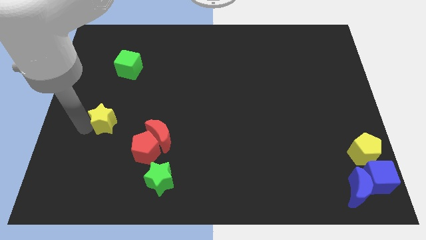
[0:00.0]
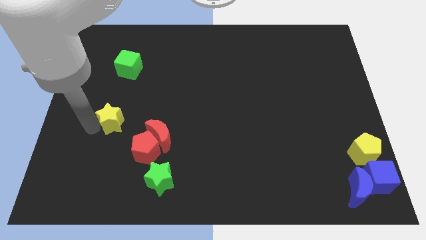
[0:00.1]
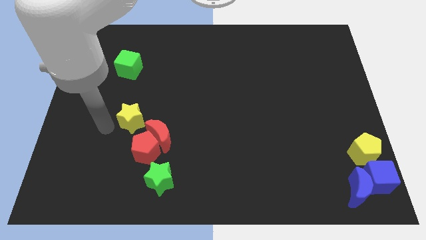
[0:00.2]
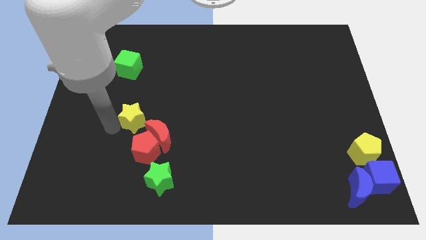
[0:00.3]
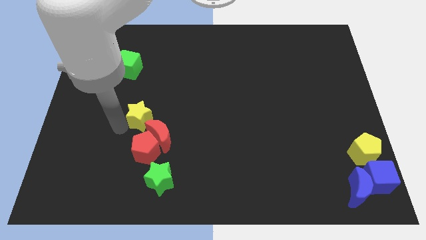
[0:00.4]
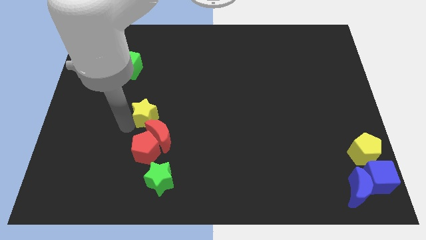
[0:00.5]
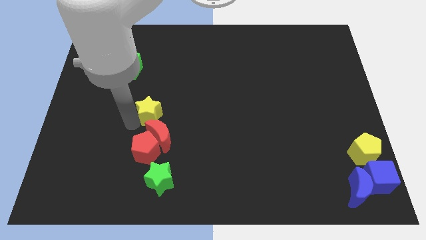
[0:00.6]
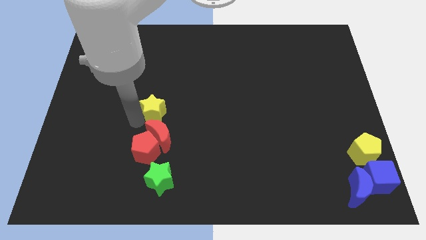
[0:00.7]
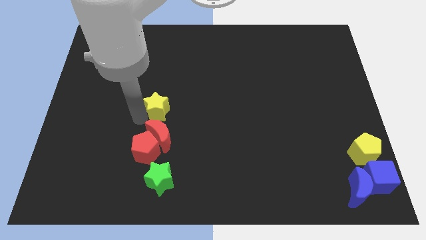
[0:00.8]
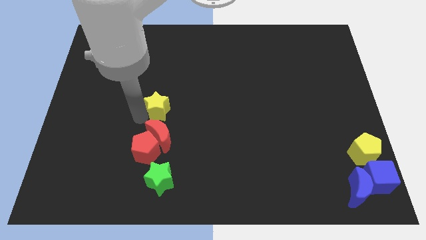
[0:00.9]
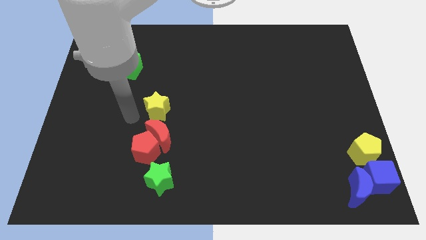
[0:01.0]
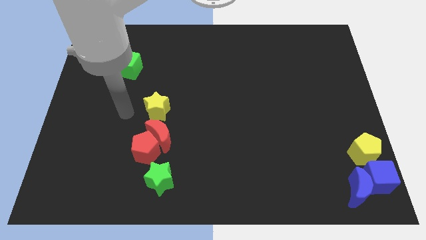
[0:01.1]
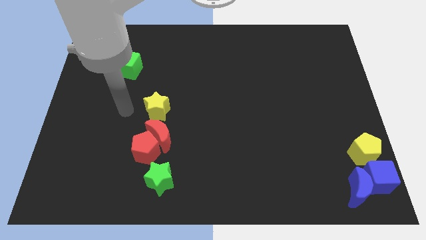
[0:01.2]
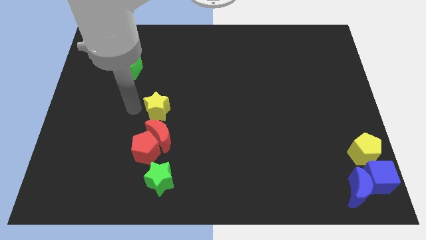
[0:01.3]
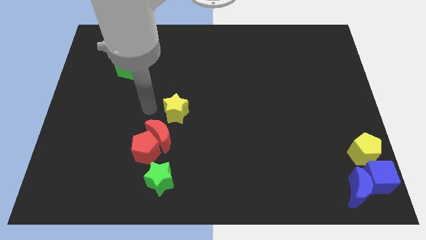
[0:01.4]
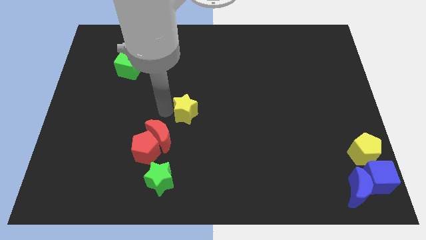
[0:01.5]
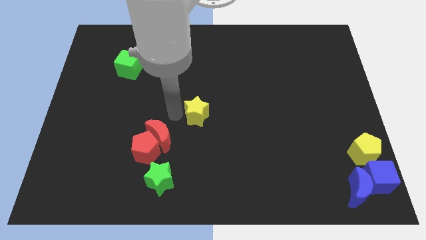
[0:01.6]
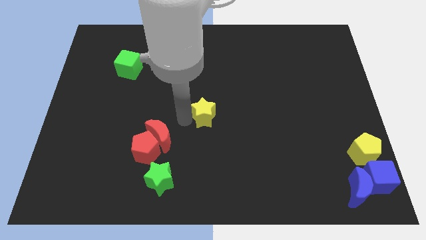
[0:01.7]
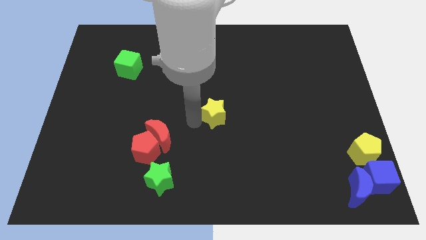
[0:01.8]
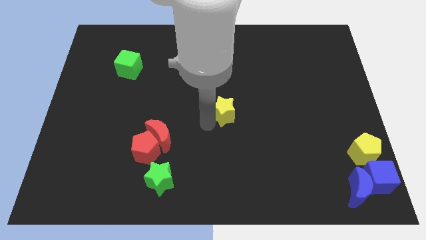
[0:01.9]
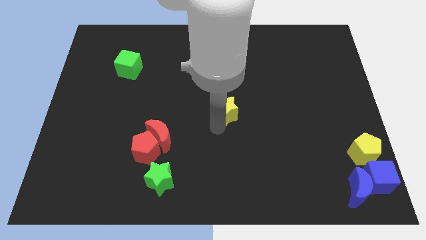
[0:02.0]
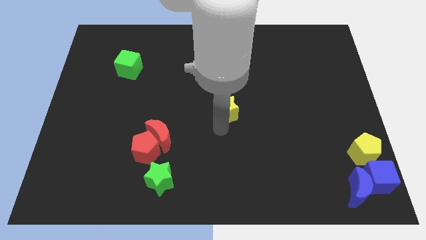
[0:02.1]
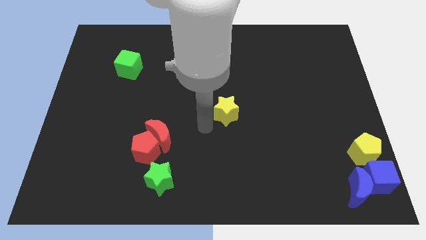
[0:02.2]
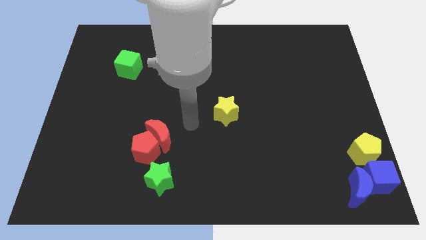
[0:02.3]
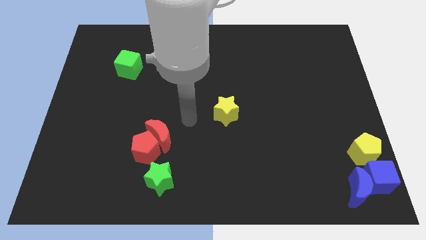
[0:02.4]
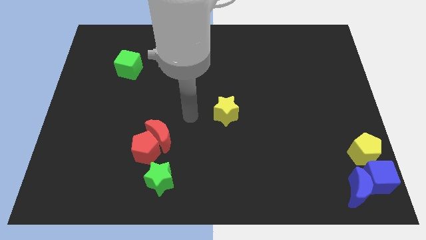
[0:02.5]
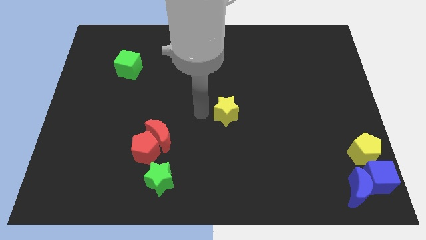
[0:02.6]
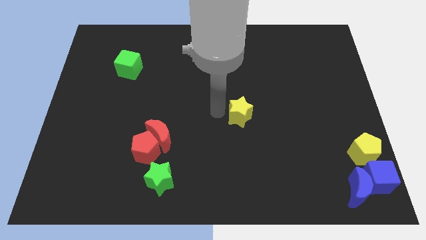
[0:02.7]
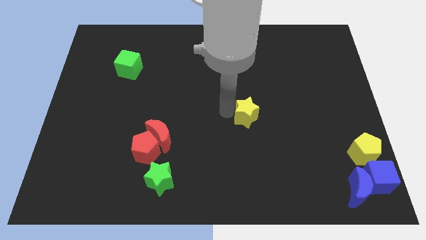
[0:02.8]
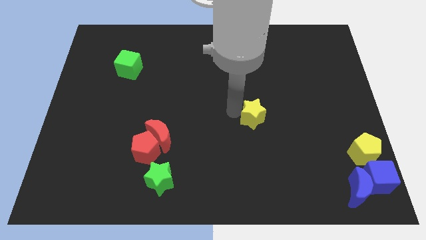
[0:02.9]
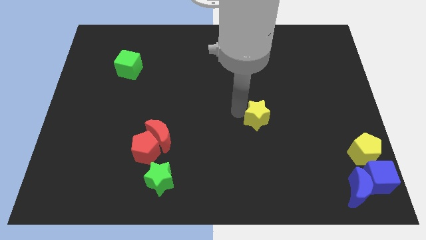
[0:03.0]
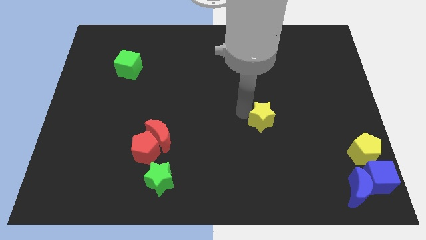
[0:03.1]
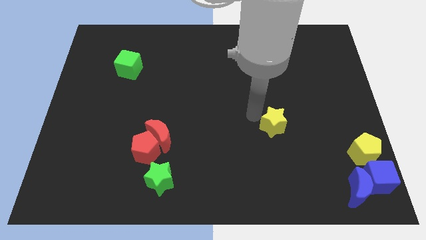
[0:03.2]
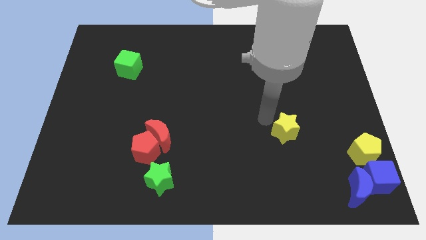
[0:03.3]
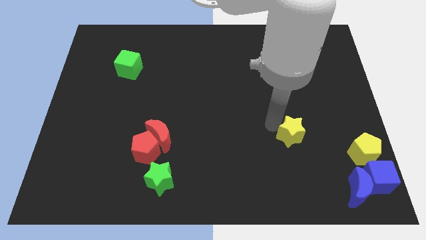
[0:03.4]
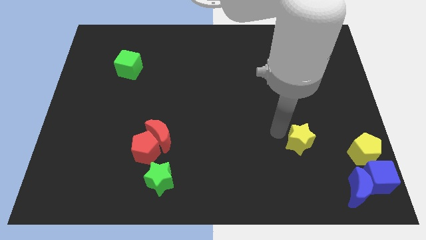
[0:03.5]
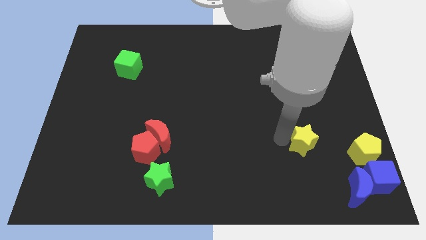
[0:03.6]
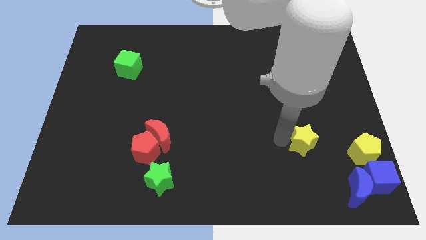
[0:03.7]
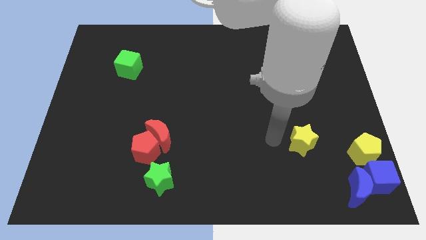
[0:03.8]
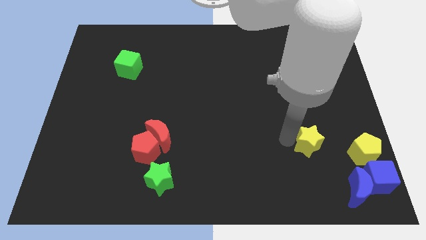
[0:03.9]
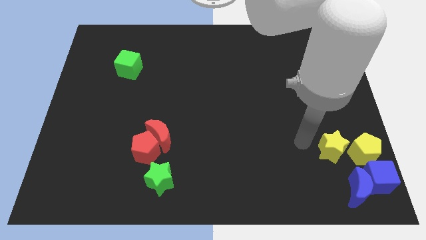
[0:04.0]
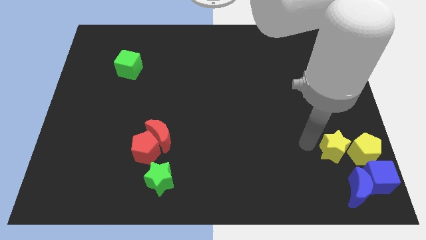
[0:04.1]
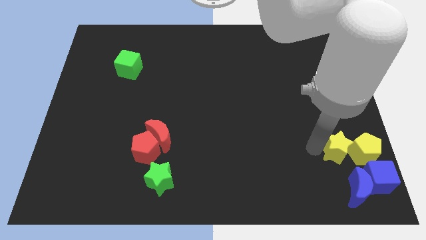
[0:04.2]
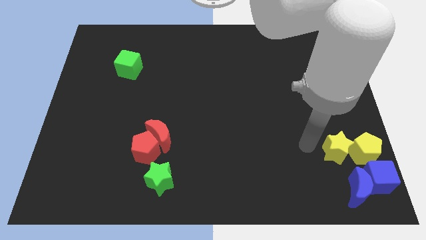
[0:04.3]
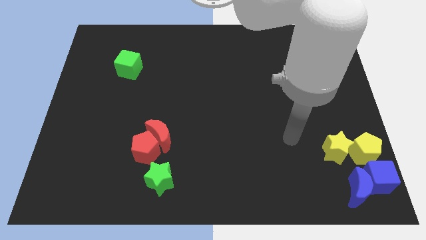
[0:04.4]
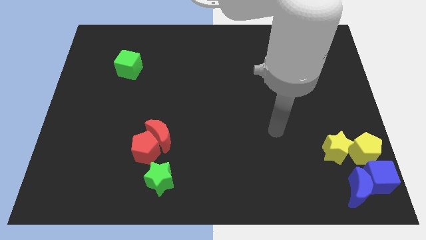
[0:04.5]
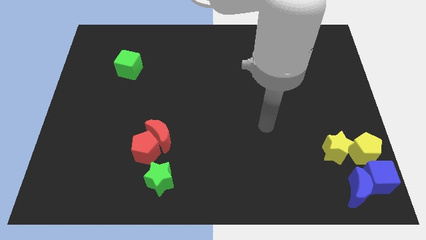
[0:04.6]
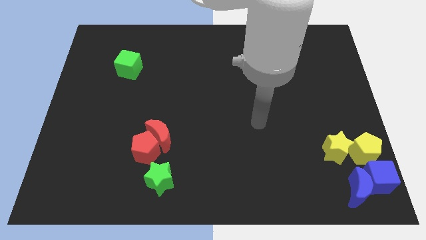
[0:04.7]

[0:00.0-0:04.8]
place yellow star to the left of yellow pentagon

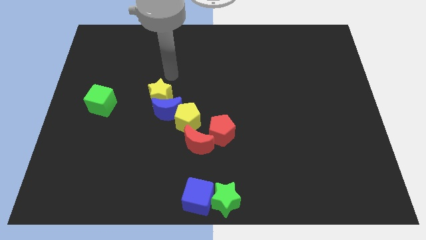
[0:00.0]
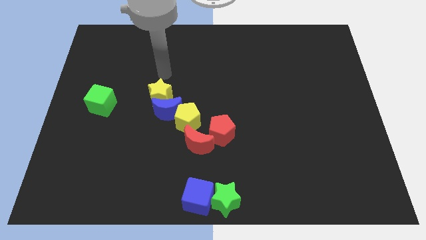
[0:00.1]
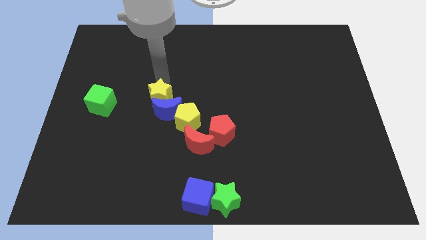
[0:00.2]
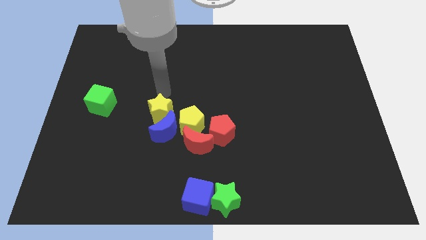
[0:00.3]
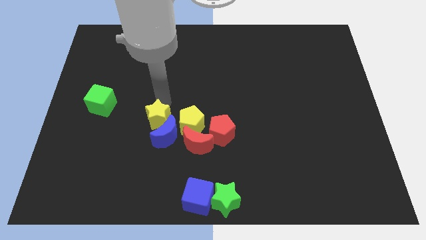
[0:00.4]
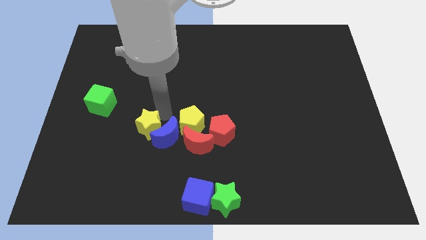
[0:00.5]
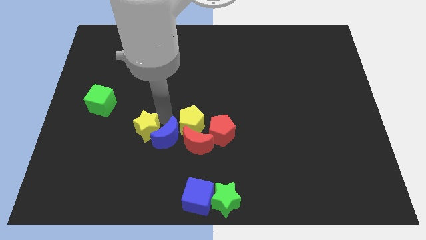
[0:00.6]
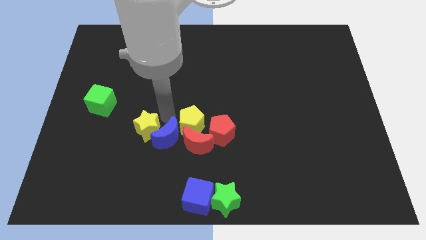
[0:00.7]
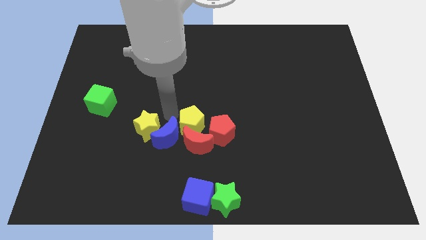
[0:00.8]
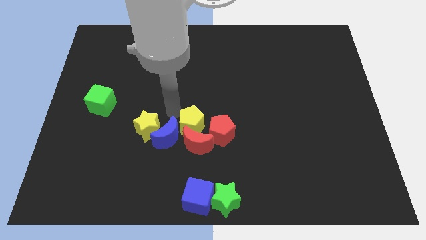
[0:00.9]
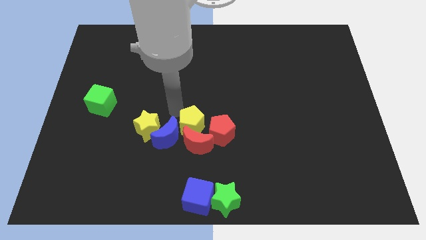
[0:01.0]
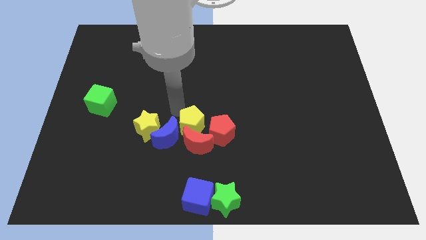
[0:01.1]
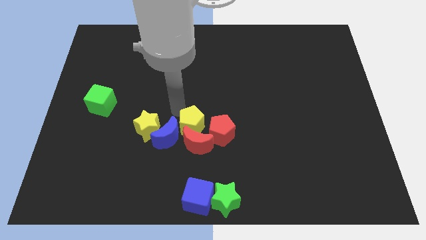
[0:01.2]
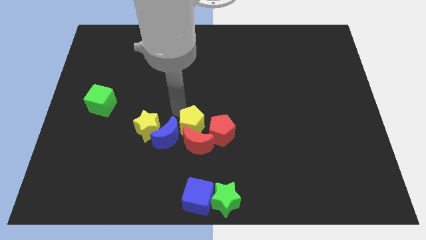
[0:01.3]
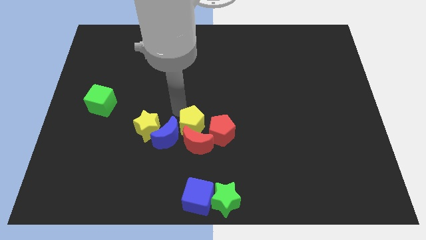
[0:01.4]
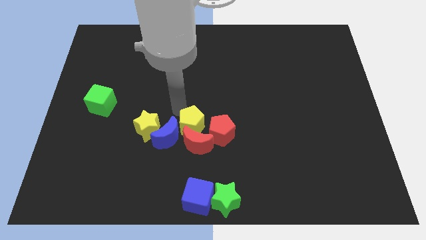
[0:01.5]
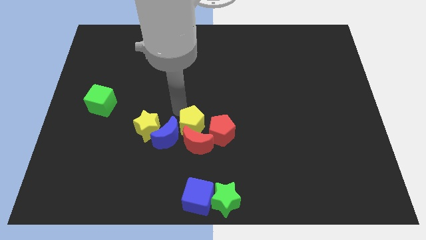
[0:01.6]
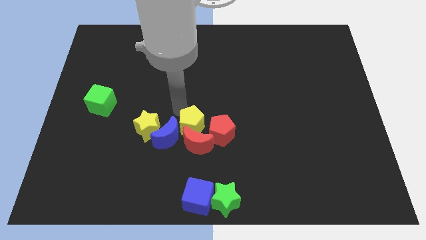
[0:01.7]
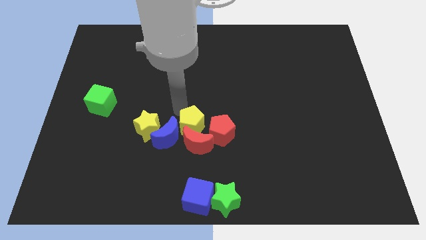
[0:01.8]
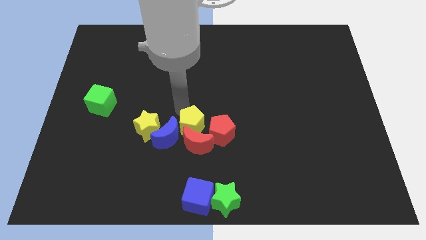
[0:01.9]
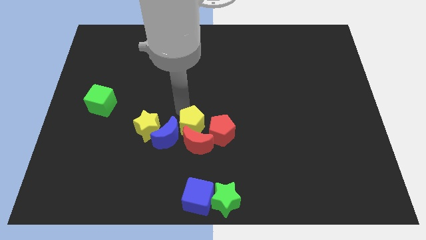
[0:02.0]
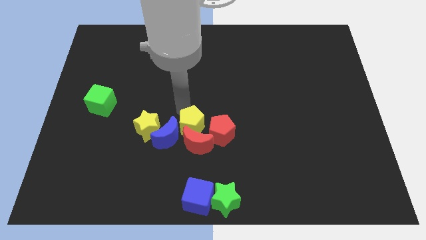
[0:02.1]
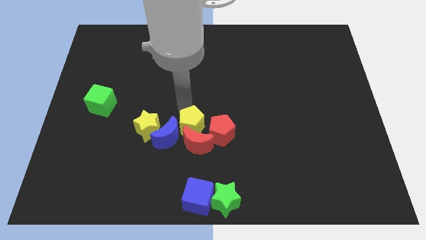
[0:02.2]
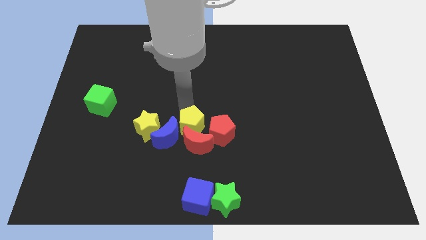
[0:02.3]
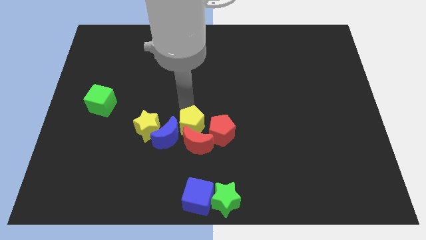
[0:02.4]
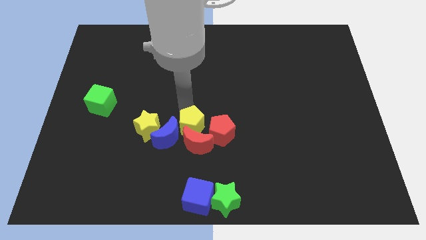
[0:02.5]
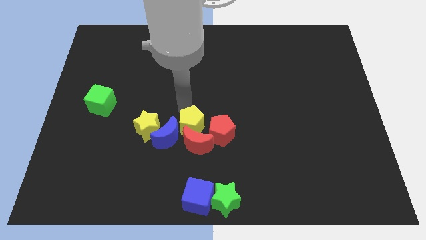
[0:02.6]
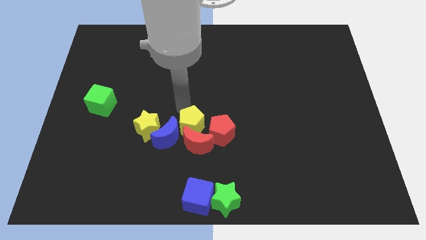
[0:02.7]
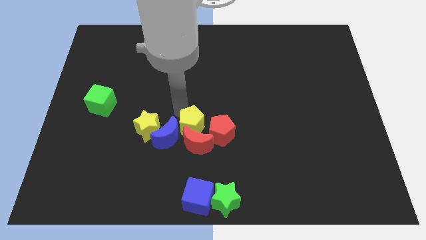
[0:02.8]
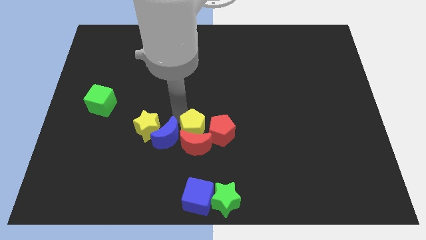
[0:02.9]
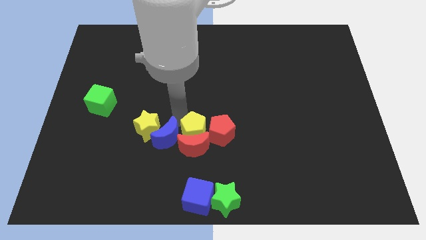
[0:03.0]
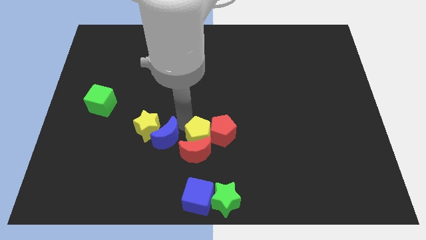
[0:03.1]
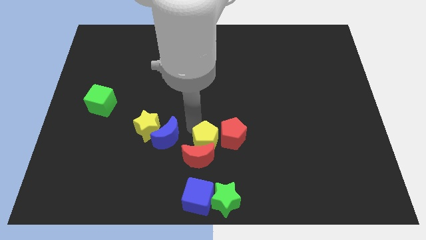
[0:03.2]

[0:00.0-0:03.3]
move the yellow star towards the left side of the blue crescent

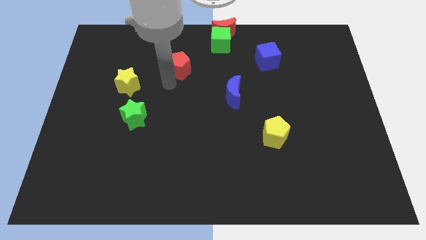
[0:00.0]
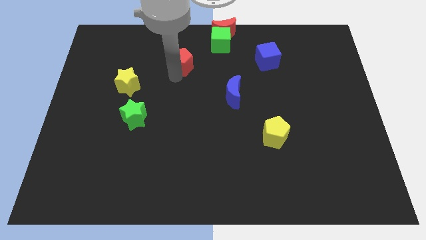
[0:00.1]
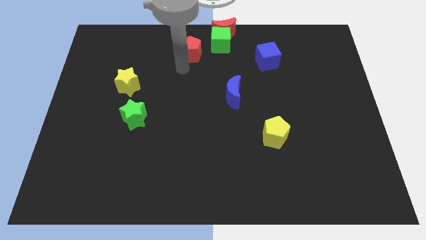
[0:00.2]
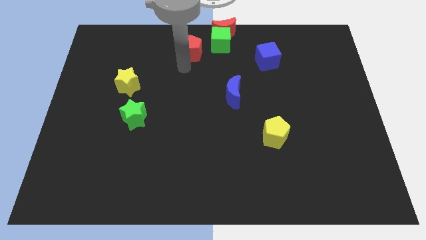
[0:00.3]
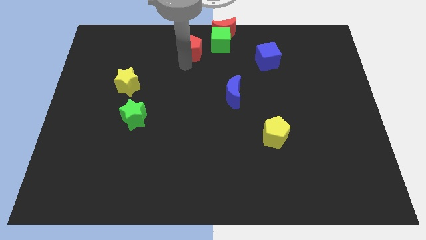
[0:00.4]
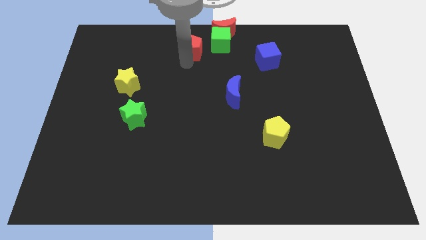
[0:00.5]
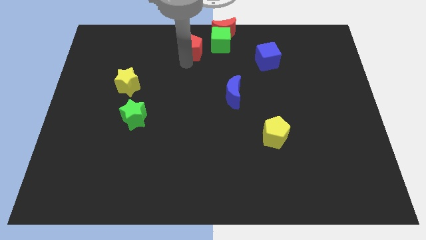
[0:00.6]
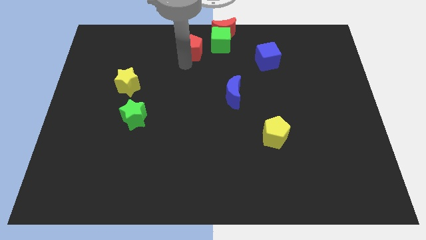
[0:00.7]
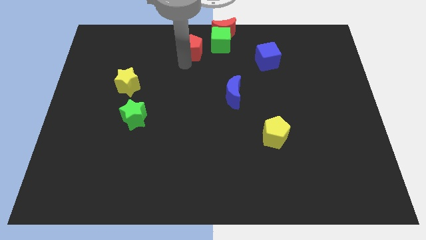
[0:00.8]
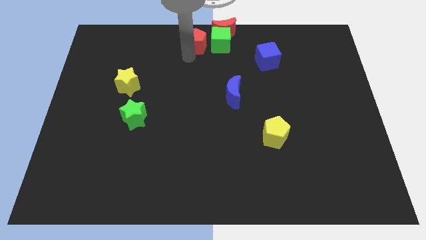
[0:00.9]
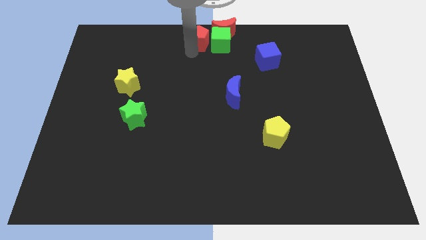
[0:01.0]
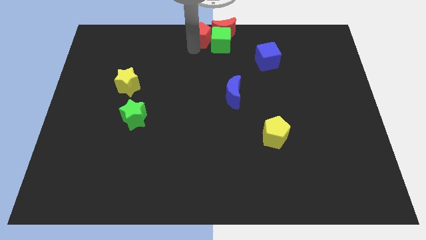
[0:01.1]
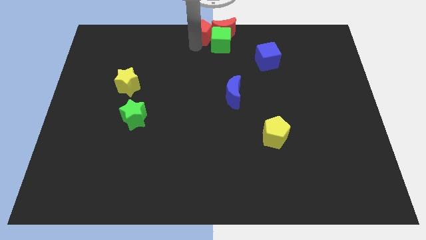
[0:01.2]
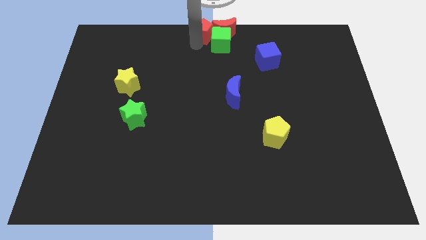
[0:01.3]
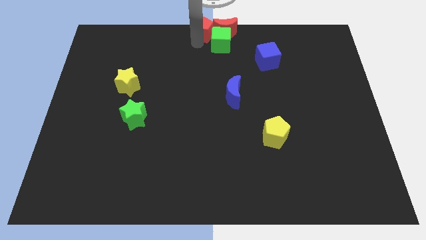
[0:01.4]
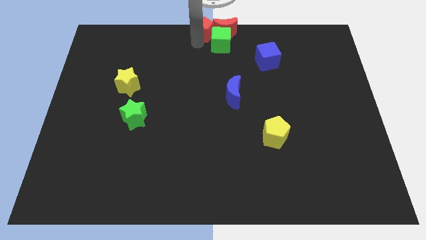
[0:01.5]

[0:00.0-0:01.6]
move the red pentagon towards the top center of the board
